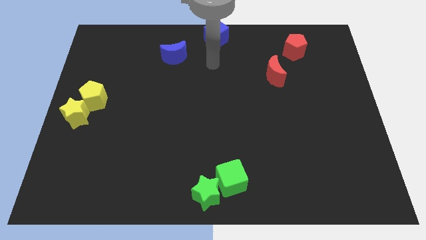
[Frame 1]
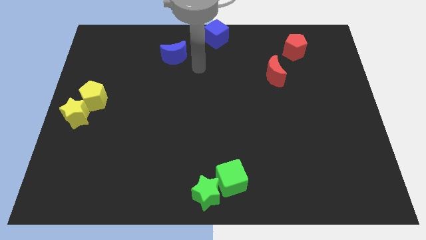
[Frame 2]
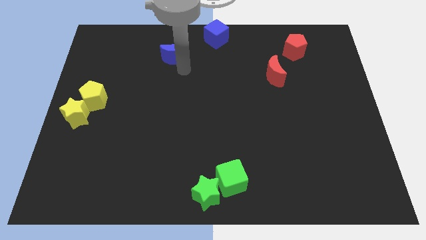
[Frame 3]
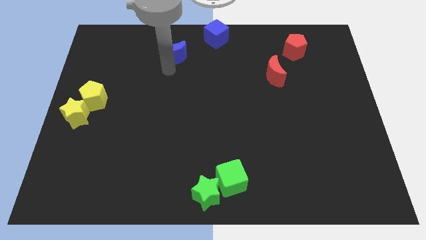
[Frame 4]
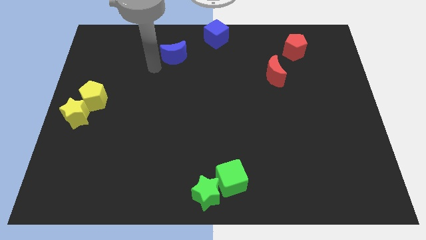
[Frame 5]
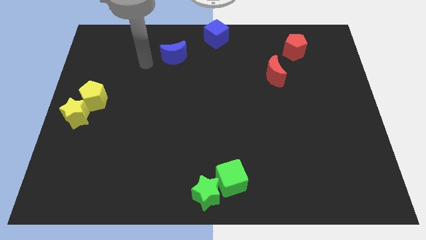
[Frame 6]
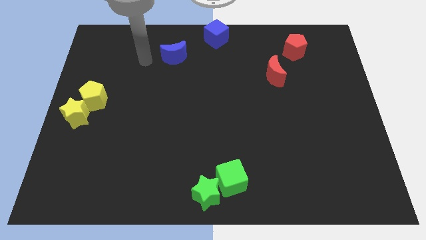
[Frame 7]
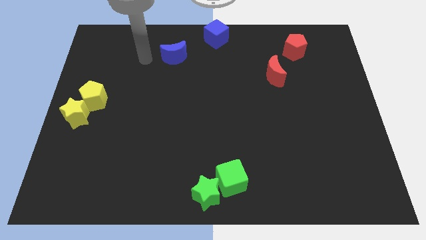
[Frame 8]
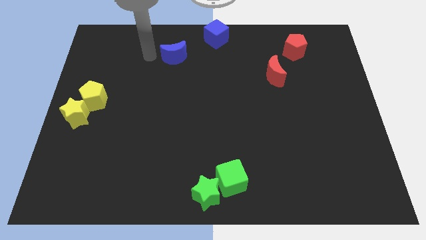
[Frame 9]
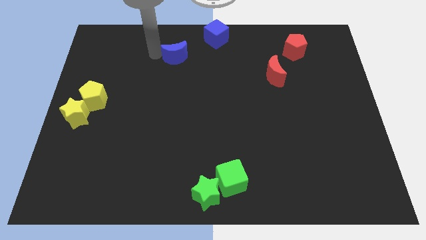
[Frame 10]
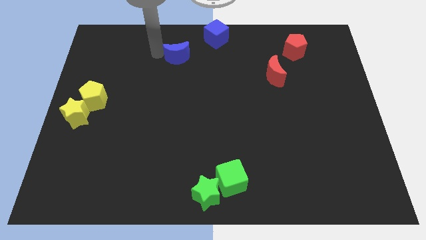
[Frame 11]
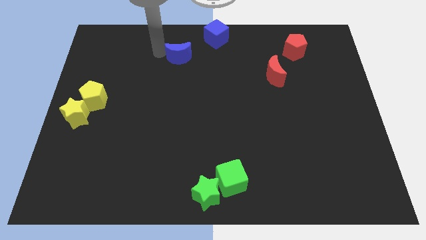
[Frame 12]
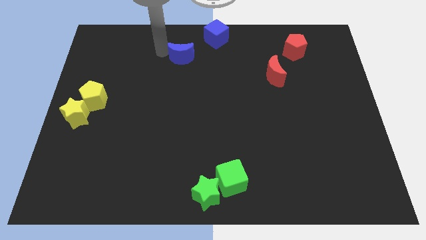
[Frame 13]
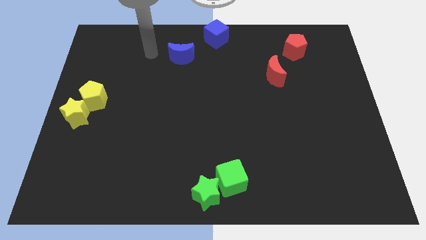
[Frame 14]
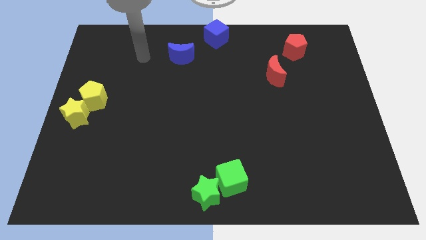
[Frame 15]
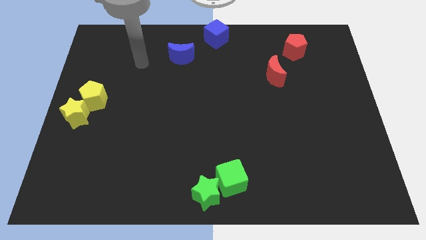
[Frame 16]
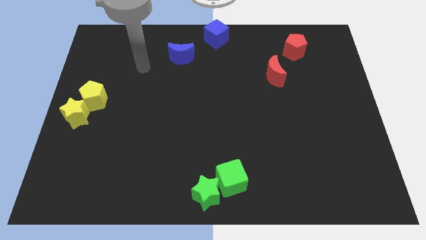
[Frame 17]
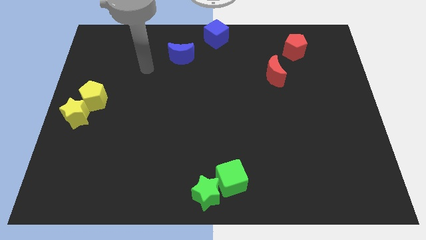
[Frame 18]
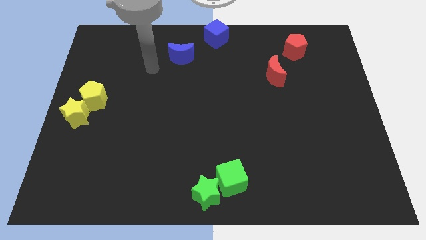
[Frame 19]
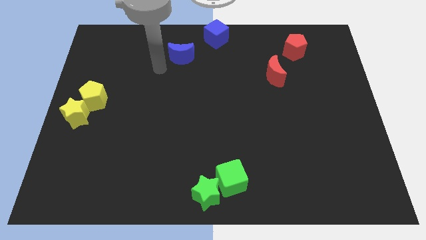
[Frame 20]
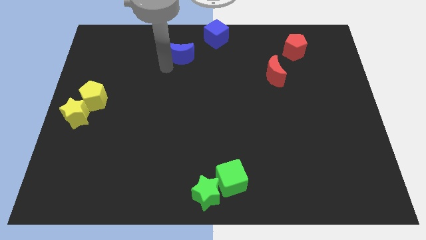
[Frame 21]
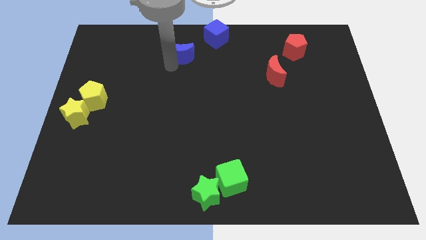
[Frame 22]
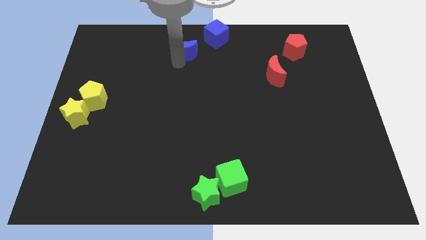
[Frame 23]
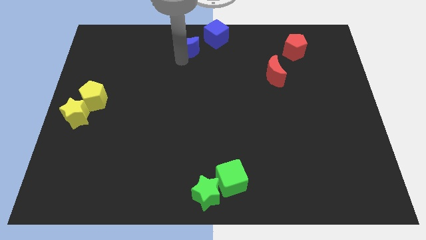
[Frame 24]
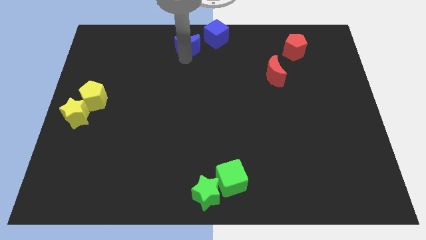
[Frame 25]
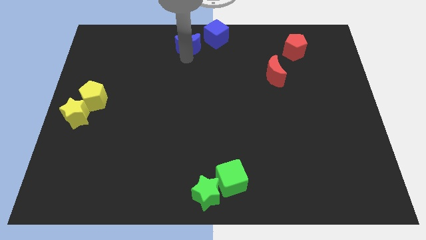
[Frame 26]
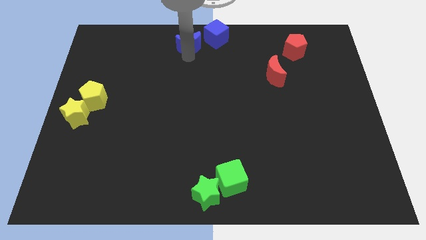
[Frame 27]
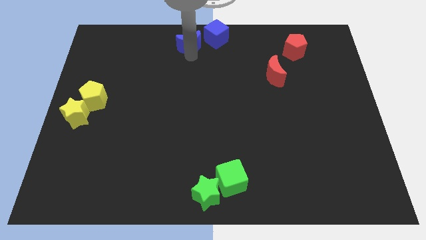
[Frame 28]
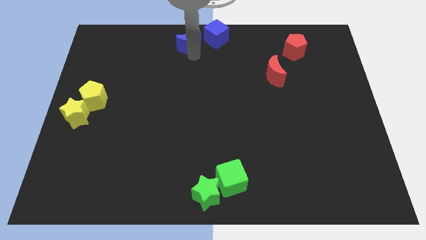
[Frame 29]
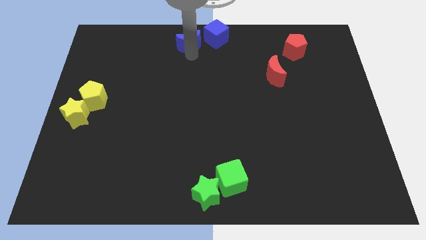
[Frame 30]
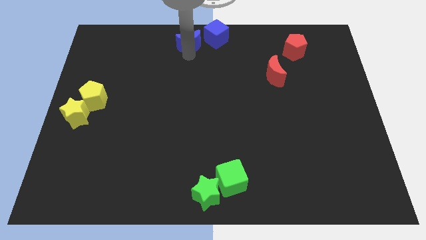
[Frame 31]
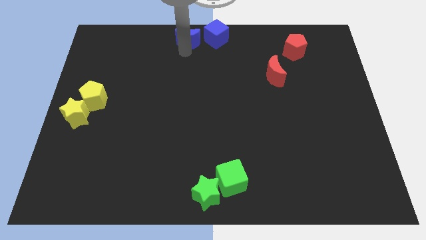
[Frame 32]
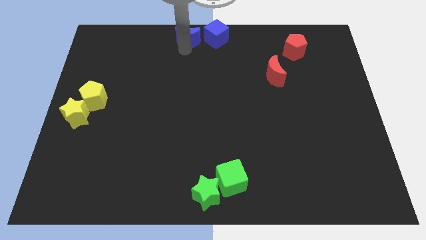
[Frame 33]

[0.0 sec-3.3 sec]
push the blue moon left to the blue square

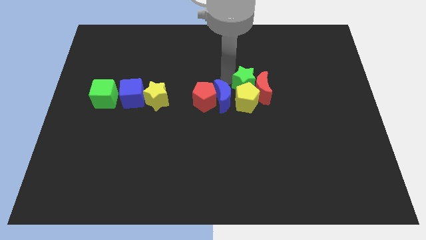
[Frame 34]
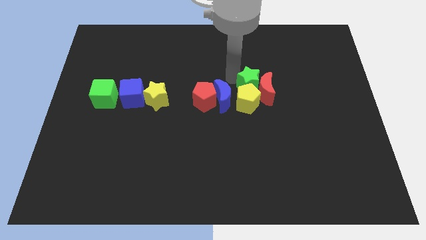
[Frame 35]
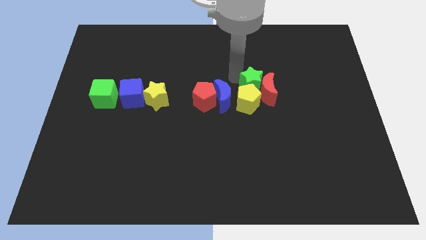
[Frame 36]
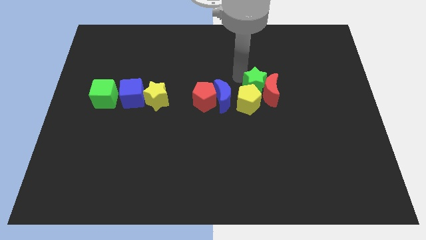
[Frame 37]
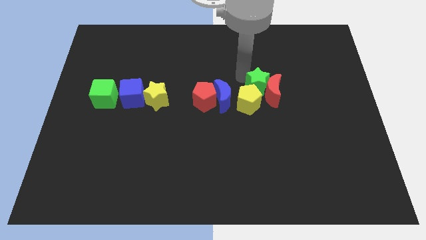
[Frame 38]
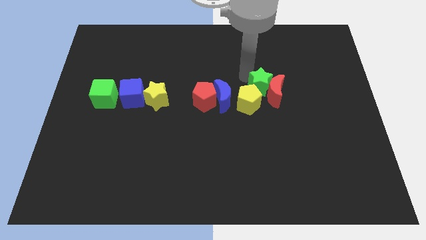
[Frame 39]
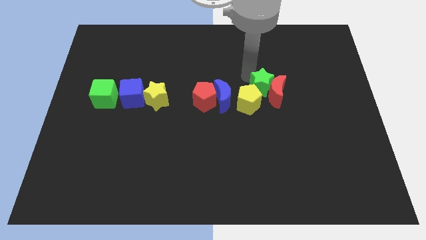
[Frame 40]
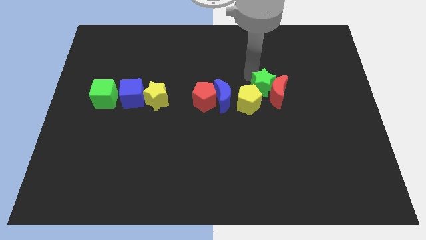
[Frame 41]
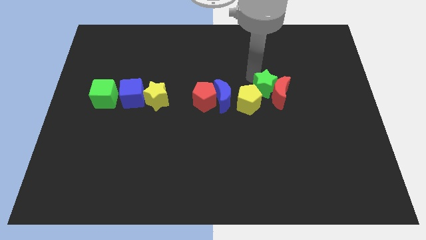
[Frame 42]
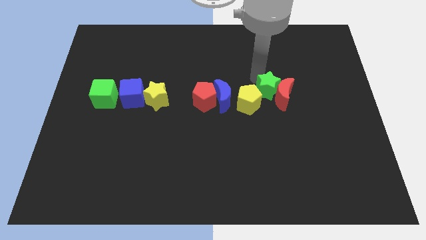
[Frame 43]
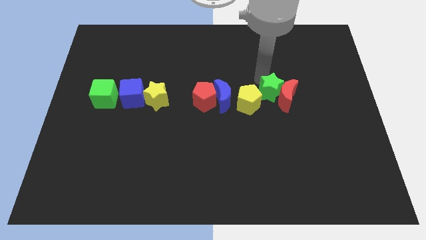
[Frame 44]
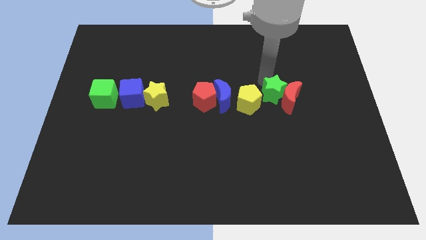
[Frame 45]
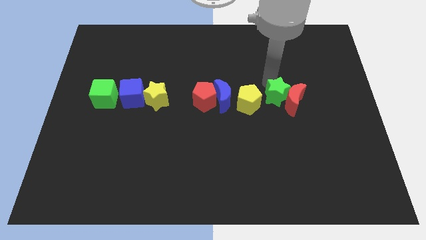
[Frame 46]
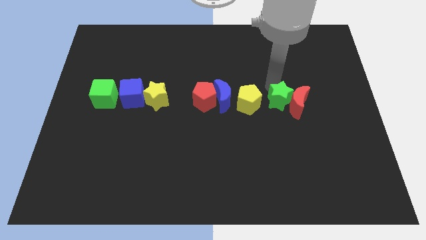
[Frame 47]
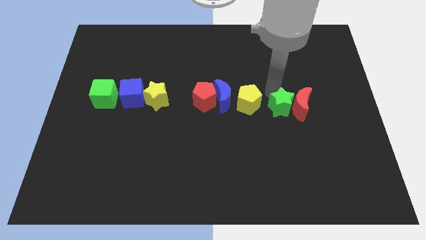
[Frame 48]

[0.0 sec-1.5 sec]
place the green star in between the yellow pentagon and red crescent

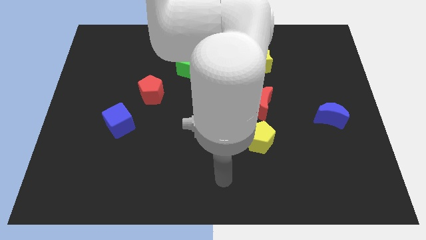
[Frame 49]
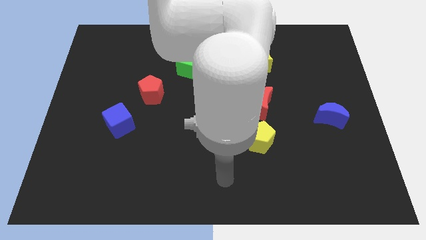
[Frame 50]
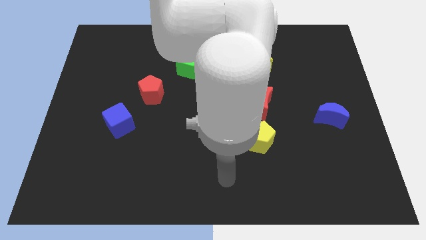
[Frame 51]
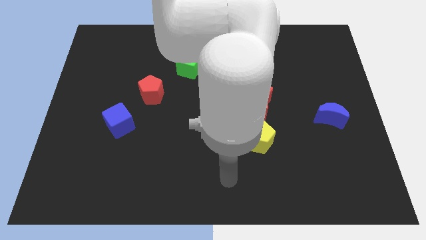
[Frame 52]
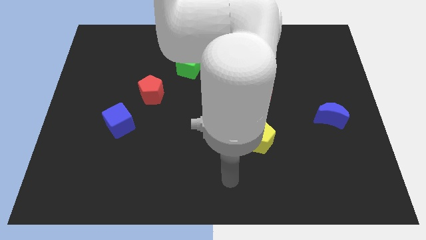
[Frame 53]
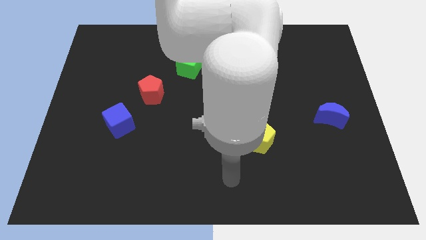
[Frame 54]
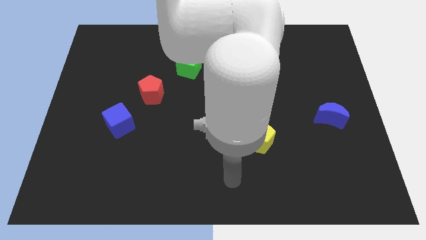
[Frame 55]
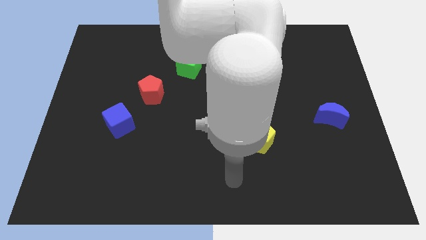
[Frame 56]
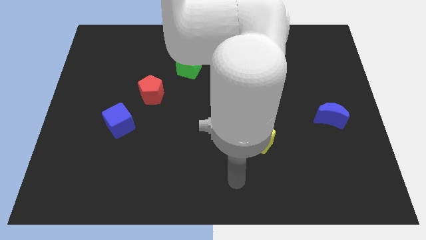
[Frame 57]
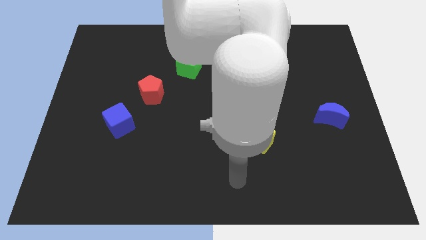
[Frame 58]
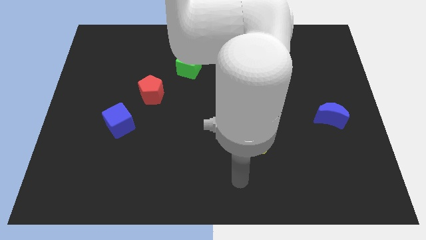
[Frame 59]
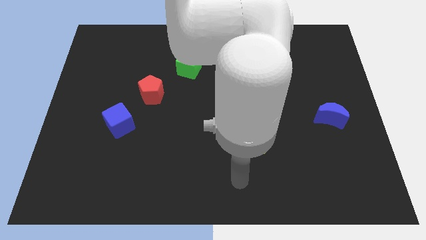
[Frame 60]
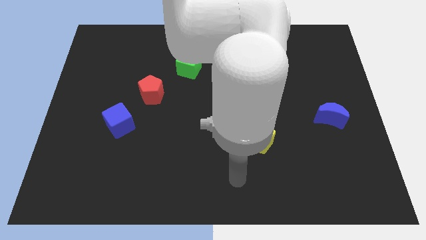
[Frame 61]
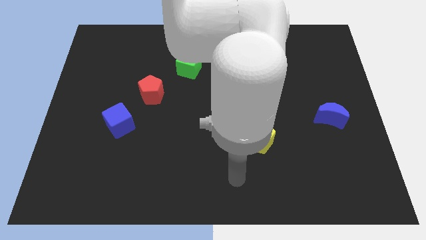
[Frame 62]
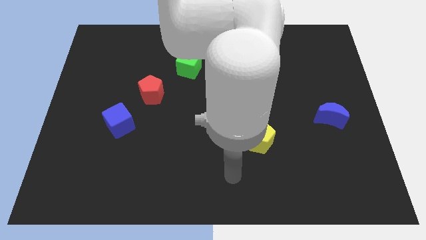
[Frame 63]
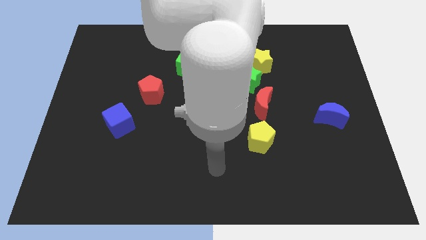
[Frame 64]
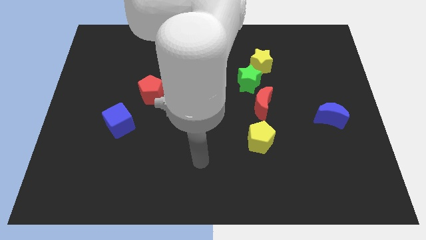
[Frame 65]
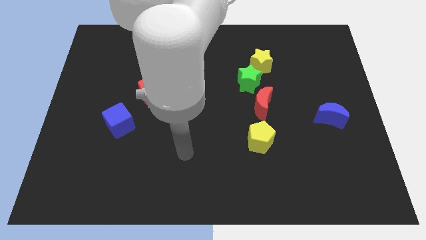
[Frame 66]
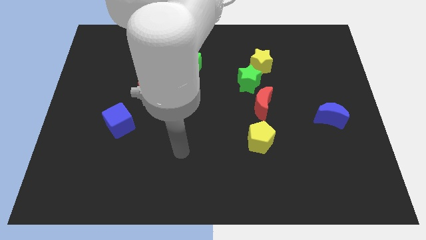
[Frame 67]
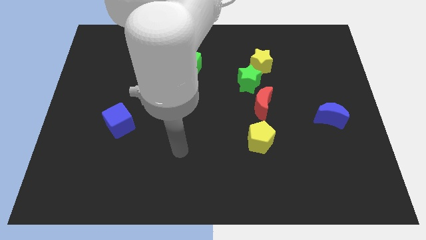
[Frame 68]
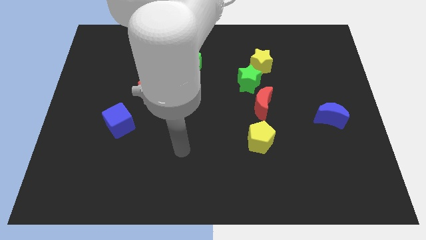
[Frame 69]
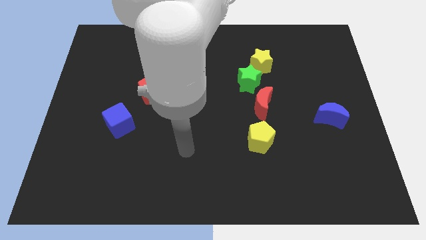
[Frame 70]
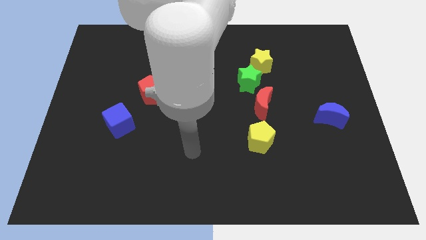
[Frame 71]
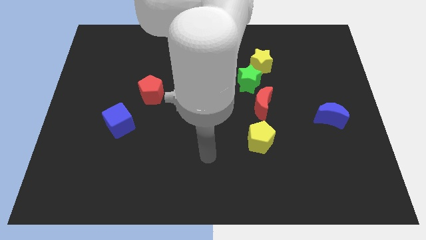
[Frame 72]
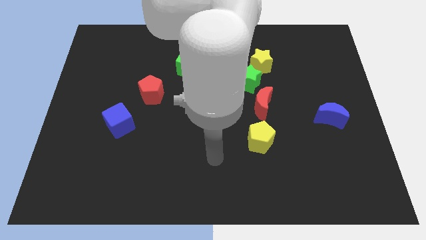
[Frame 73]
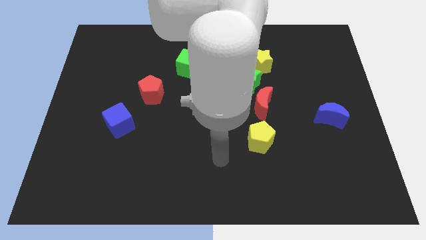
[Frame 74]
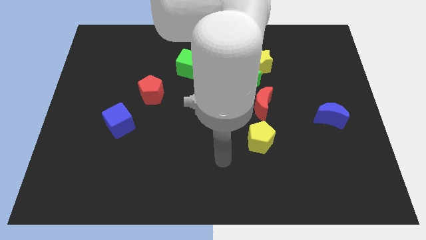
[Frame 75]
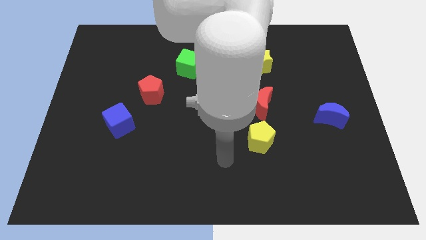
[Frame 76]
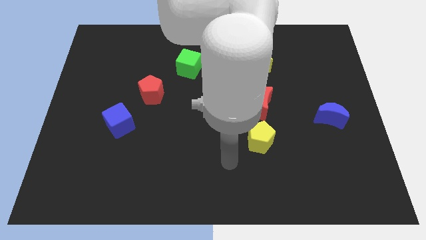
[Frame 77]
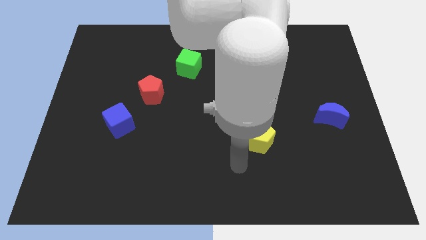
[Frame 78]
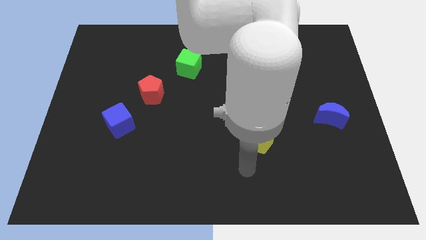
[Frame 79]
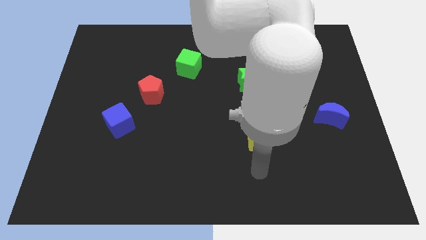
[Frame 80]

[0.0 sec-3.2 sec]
go near the yellow pentagon

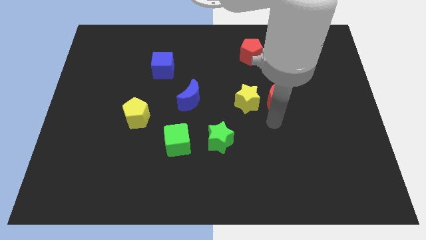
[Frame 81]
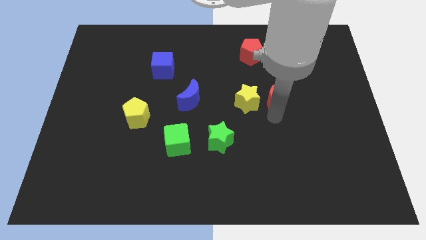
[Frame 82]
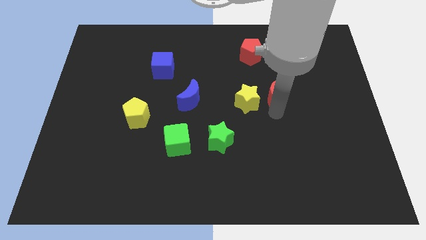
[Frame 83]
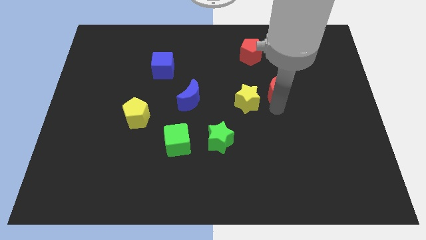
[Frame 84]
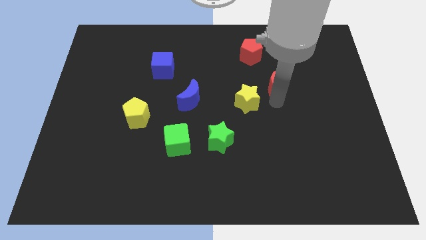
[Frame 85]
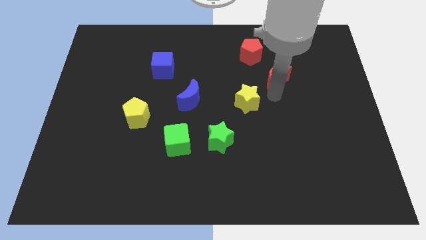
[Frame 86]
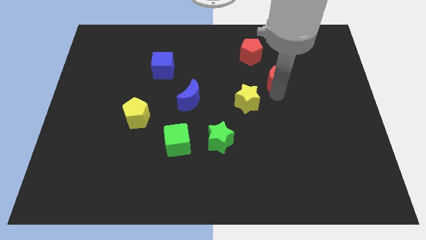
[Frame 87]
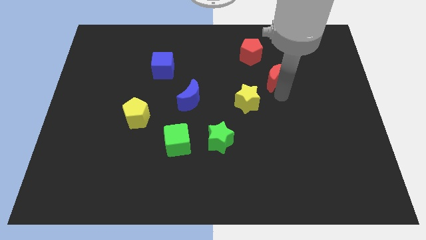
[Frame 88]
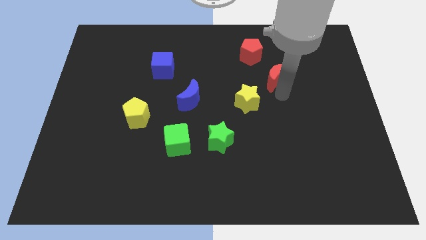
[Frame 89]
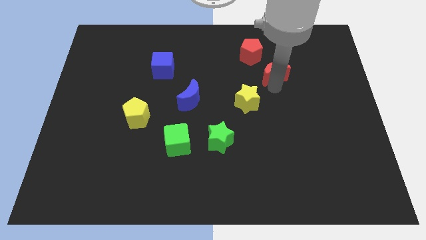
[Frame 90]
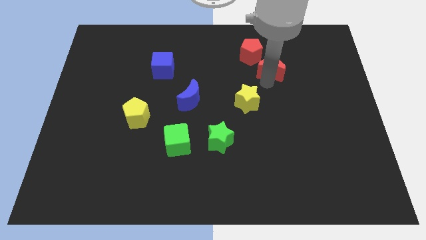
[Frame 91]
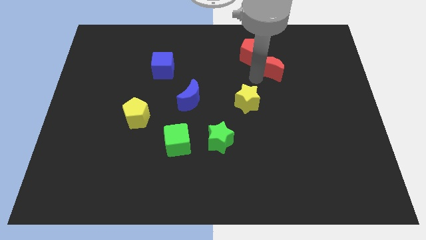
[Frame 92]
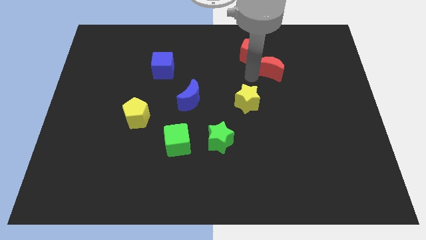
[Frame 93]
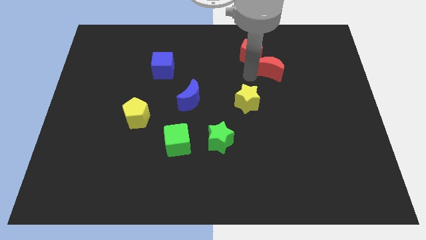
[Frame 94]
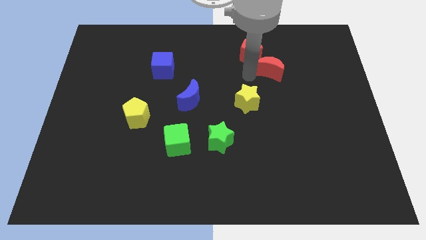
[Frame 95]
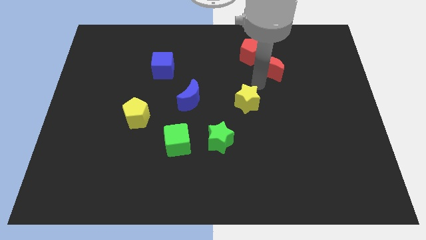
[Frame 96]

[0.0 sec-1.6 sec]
put the red crescent bottom right to the red pentagon
